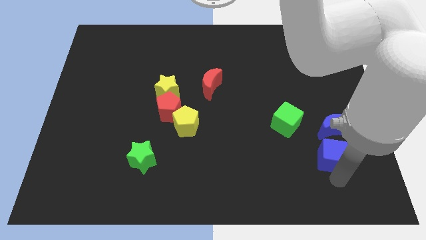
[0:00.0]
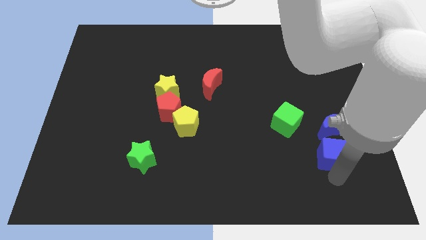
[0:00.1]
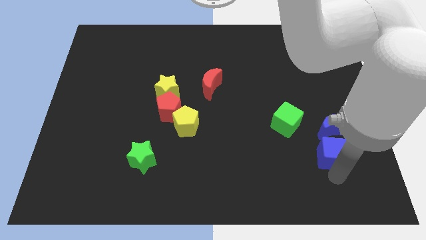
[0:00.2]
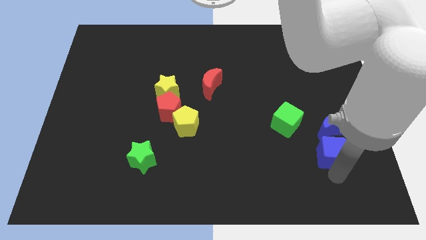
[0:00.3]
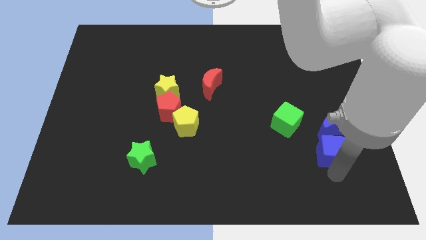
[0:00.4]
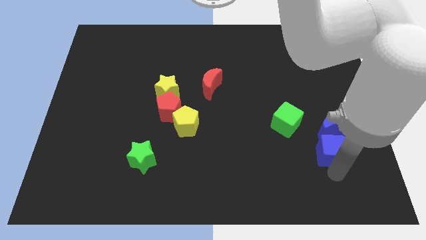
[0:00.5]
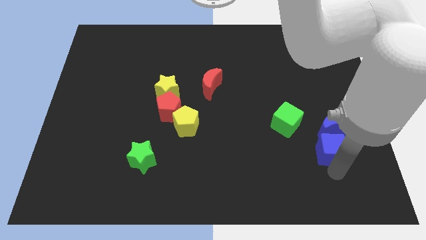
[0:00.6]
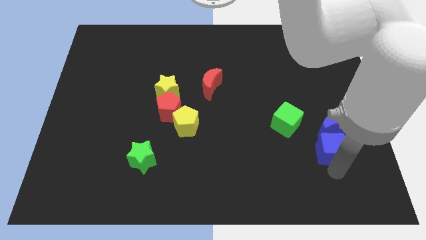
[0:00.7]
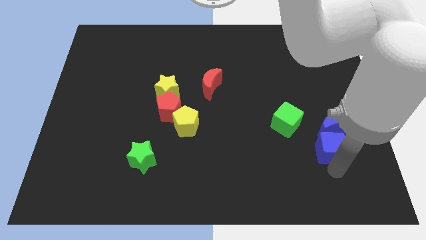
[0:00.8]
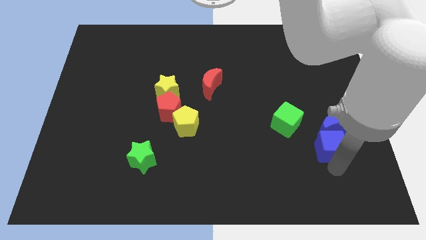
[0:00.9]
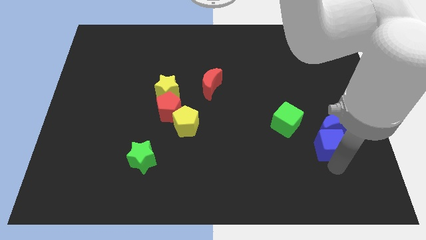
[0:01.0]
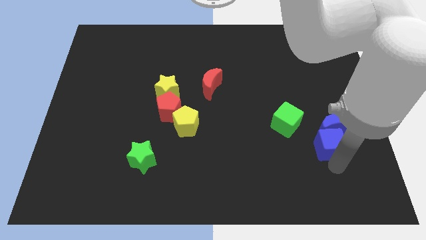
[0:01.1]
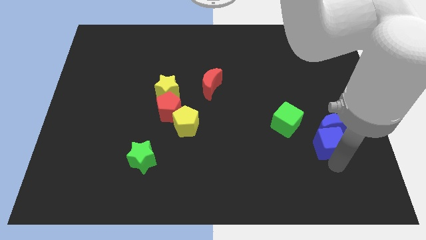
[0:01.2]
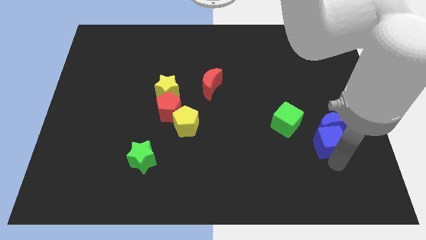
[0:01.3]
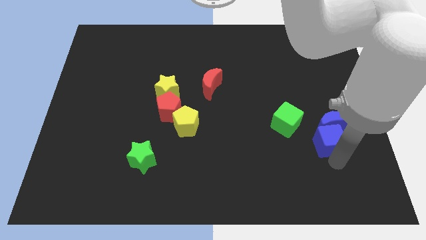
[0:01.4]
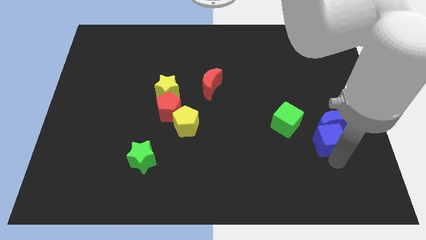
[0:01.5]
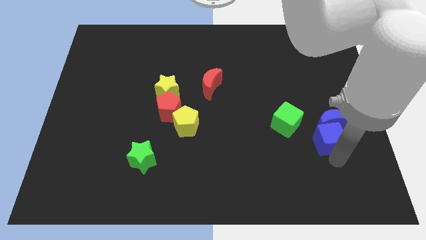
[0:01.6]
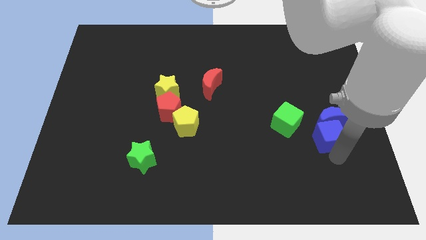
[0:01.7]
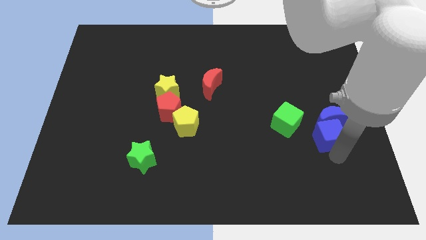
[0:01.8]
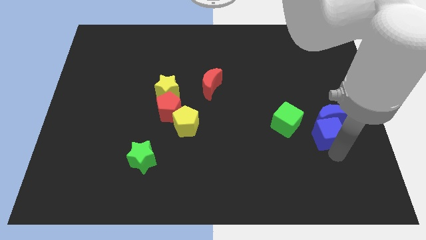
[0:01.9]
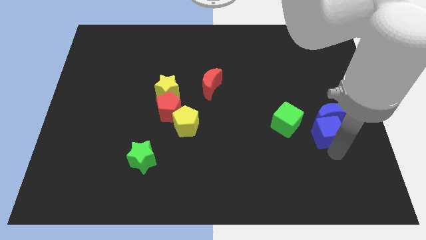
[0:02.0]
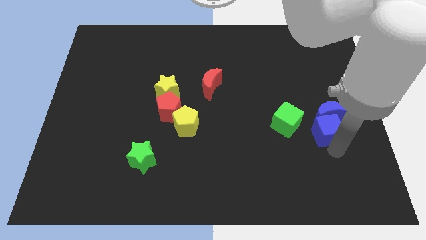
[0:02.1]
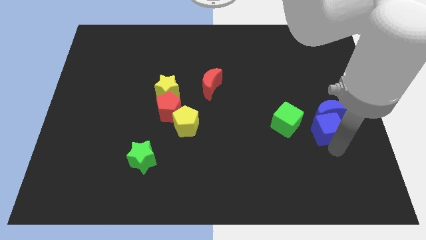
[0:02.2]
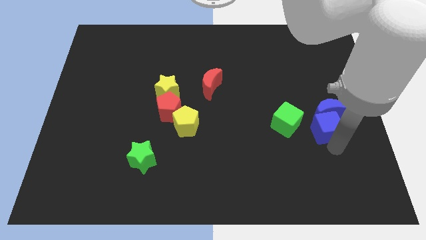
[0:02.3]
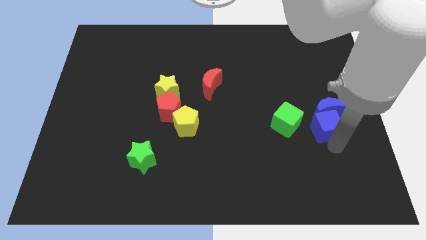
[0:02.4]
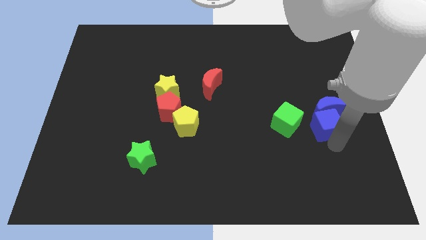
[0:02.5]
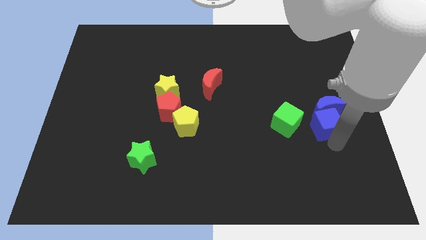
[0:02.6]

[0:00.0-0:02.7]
move the blue cube to the right of the green cube

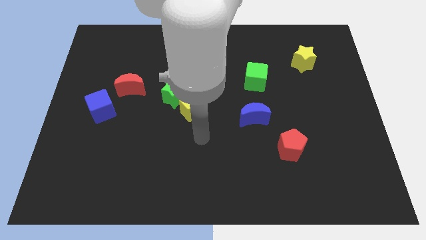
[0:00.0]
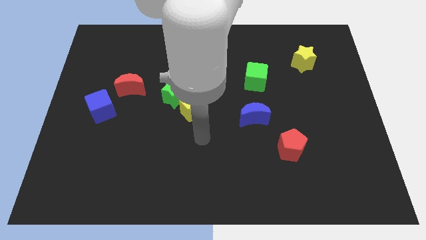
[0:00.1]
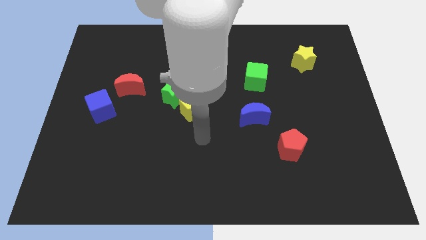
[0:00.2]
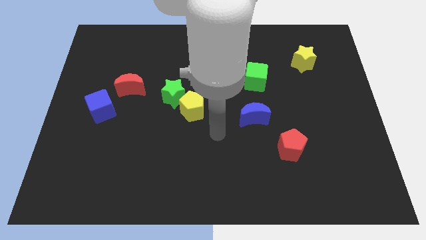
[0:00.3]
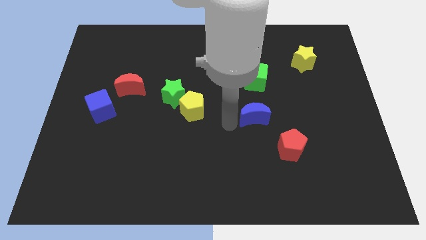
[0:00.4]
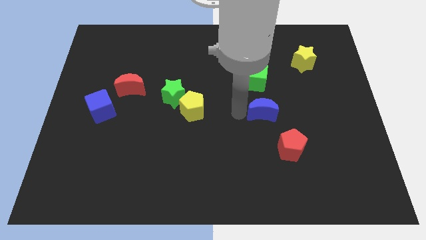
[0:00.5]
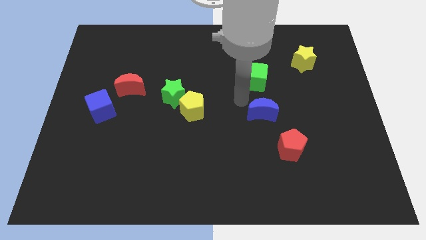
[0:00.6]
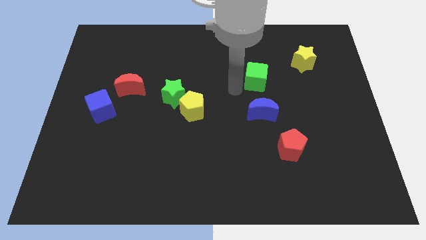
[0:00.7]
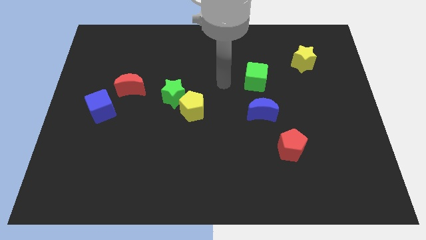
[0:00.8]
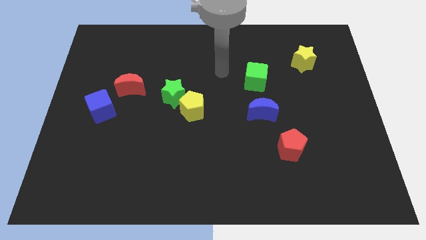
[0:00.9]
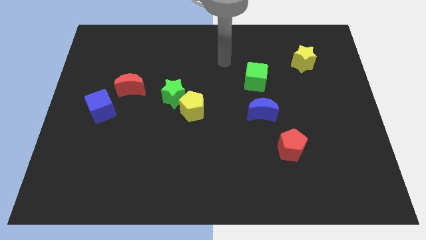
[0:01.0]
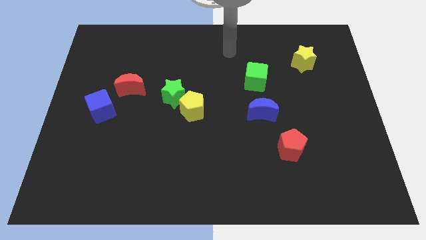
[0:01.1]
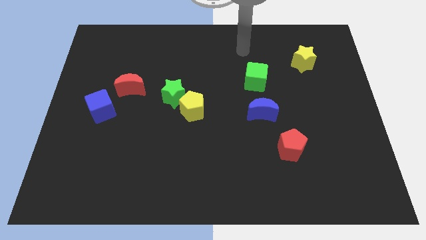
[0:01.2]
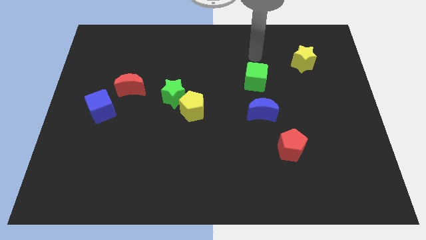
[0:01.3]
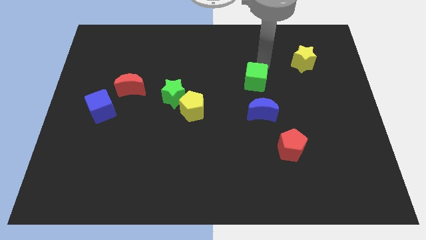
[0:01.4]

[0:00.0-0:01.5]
move the blue moon vertically below the green cube

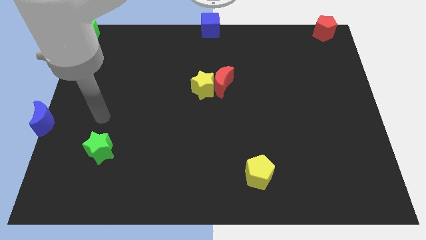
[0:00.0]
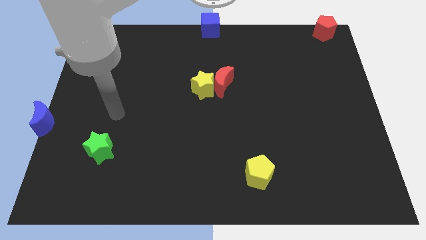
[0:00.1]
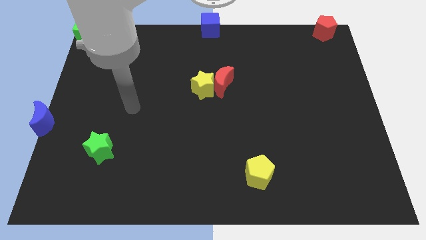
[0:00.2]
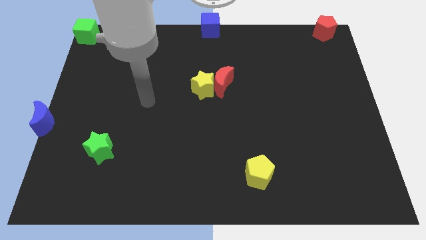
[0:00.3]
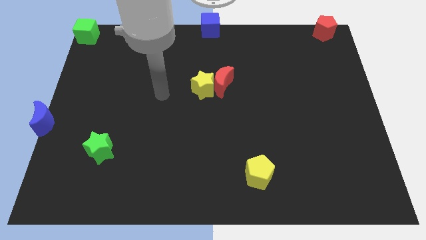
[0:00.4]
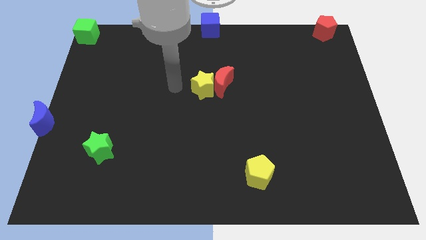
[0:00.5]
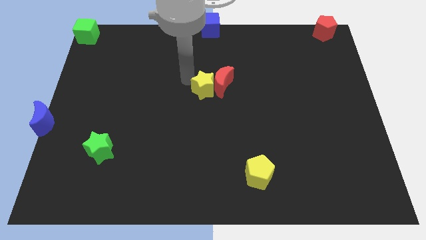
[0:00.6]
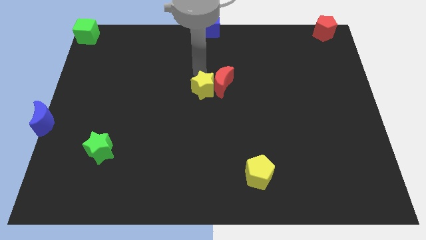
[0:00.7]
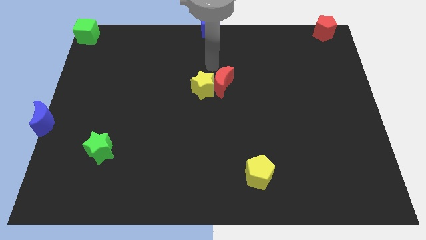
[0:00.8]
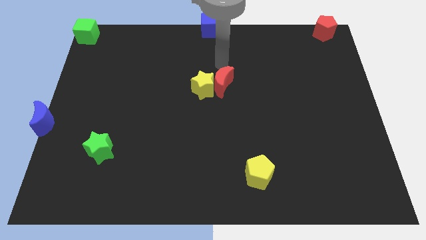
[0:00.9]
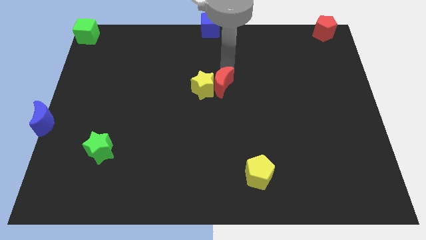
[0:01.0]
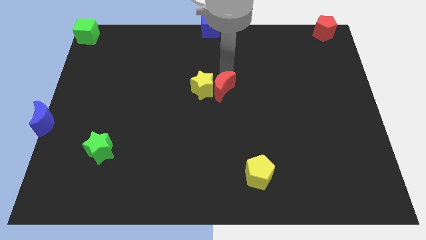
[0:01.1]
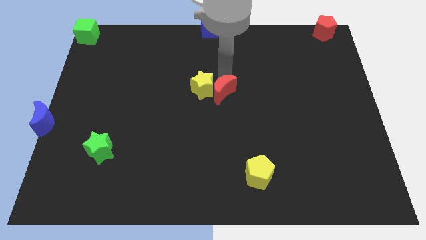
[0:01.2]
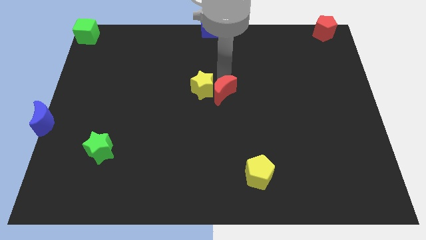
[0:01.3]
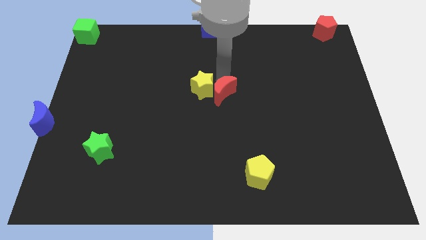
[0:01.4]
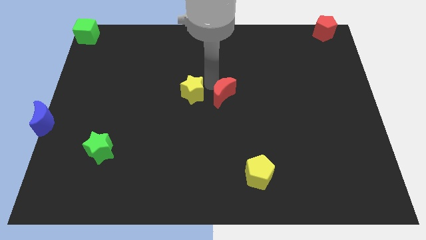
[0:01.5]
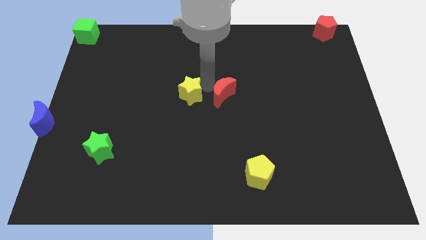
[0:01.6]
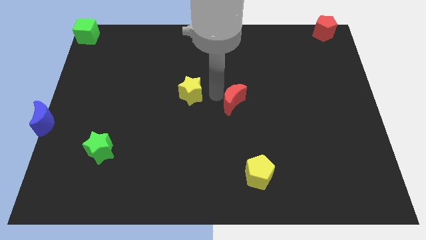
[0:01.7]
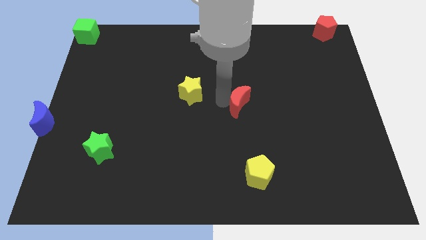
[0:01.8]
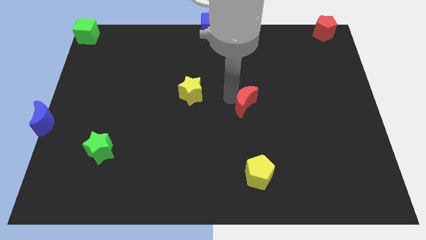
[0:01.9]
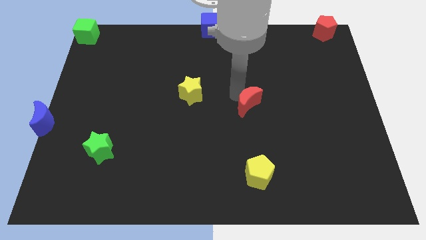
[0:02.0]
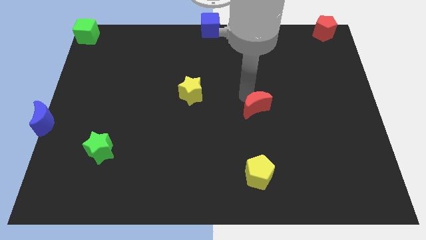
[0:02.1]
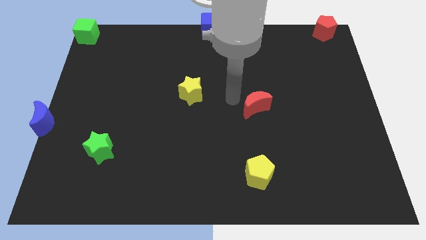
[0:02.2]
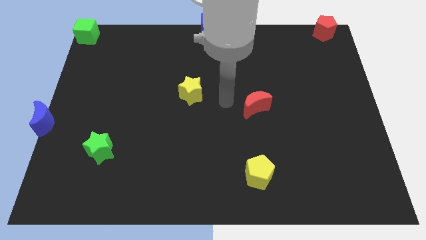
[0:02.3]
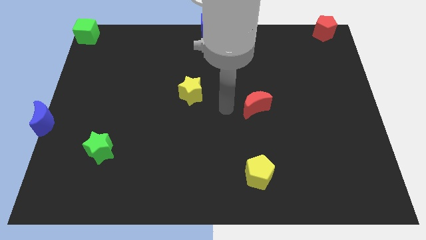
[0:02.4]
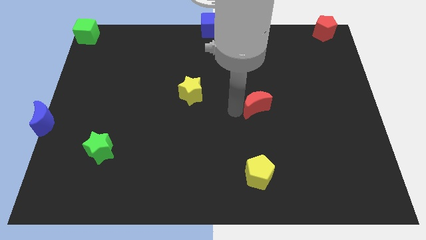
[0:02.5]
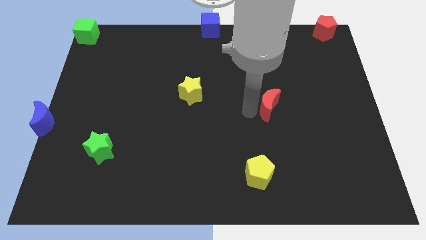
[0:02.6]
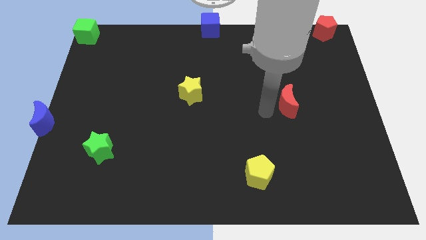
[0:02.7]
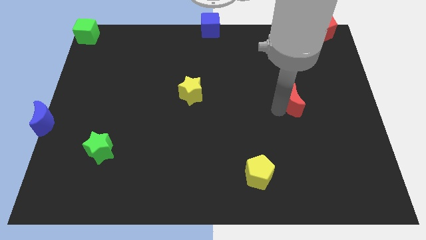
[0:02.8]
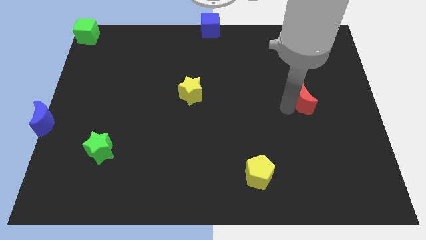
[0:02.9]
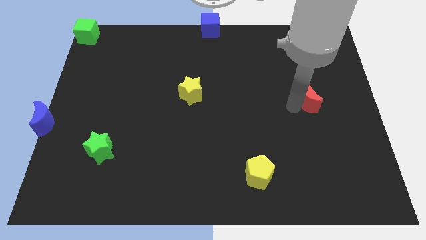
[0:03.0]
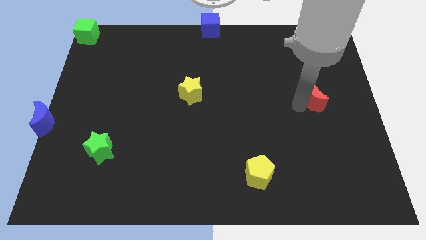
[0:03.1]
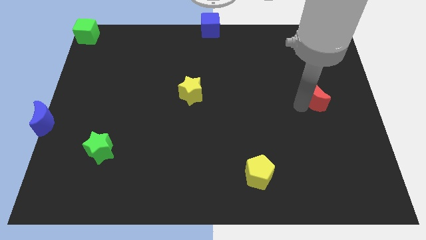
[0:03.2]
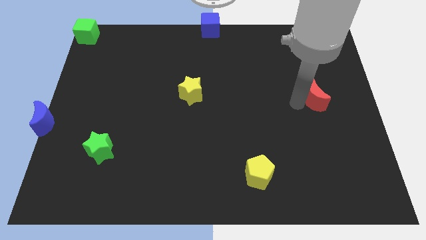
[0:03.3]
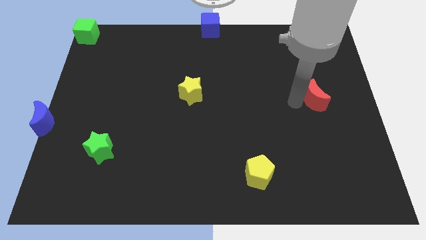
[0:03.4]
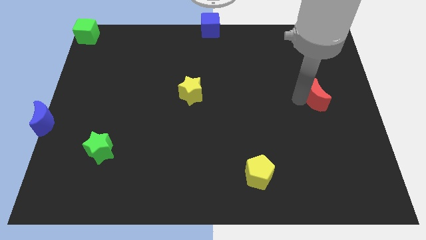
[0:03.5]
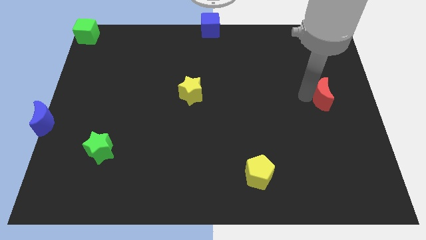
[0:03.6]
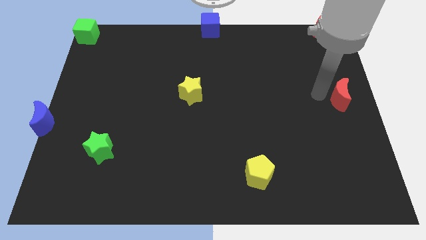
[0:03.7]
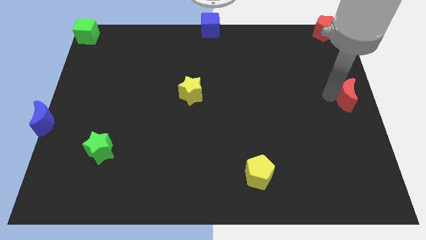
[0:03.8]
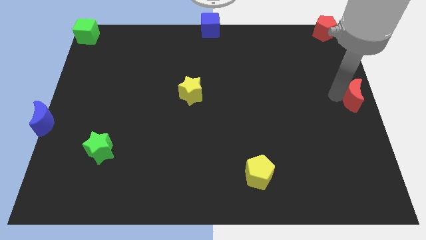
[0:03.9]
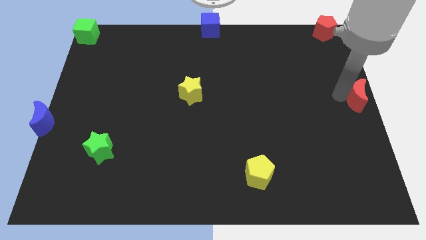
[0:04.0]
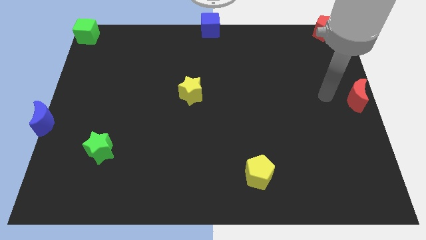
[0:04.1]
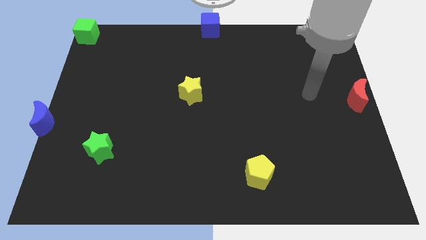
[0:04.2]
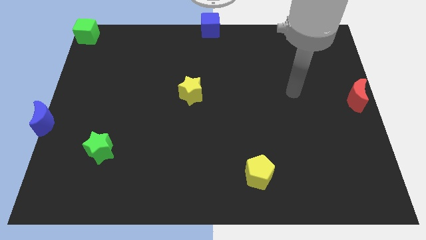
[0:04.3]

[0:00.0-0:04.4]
place the red crescent to the right center of the board

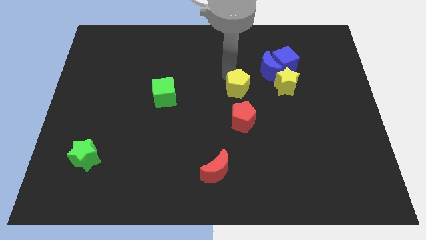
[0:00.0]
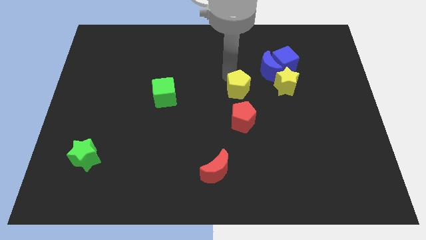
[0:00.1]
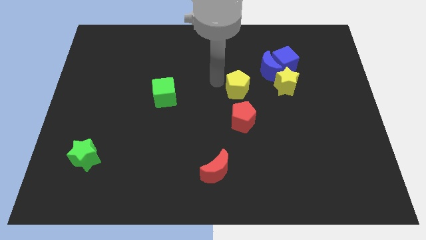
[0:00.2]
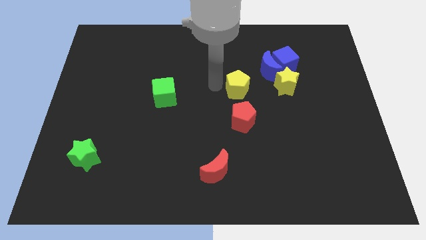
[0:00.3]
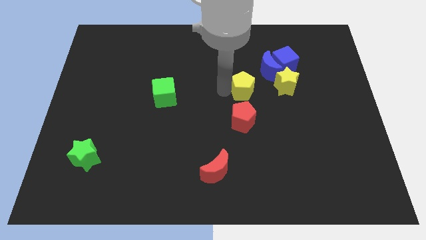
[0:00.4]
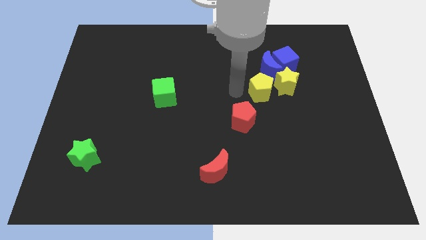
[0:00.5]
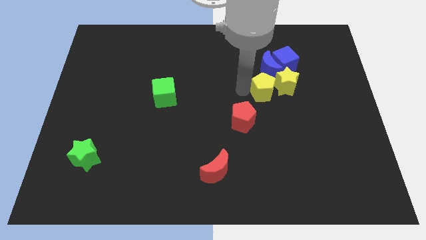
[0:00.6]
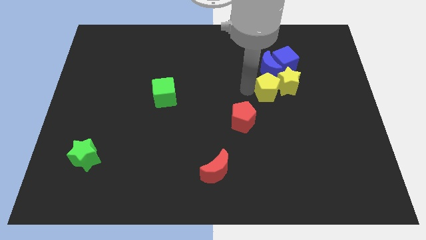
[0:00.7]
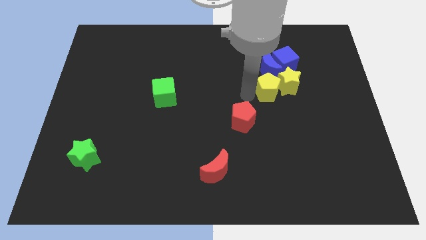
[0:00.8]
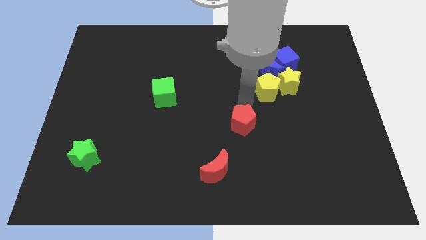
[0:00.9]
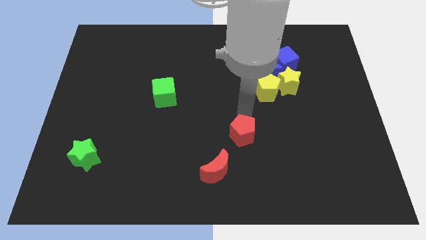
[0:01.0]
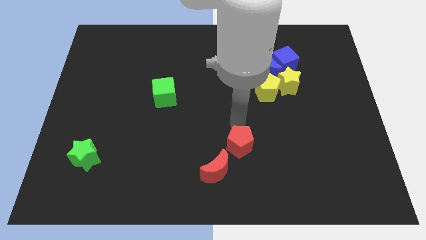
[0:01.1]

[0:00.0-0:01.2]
move the yellow pentagon into the yellow star
